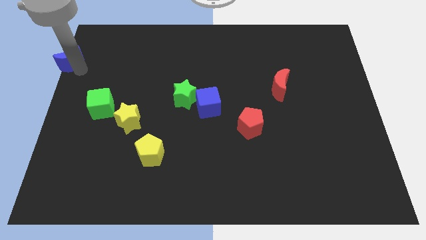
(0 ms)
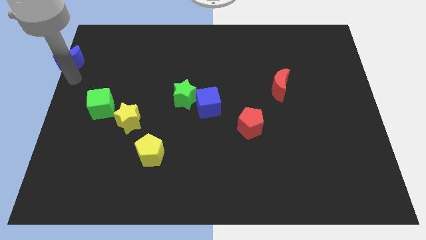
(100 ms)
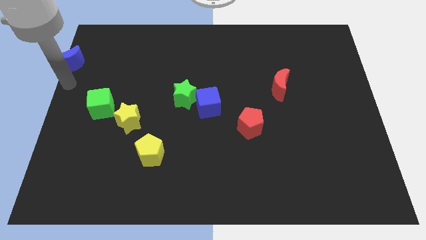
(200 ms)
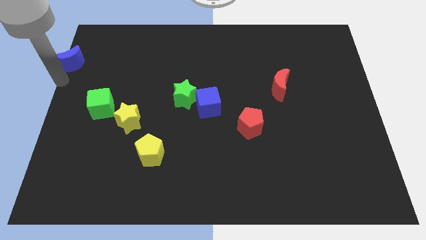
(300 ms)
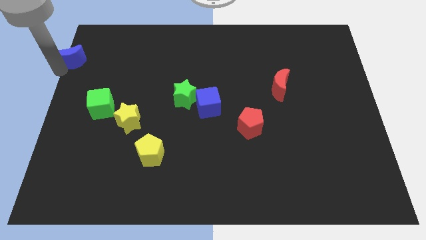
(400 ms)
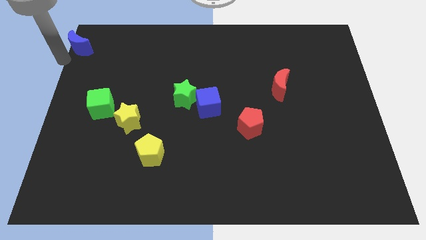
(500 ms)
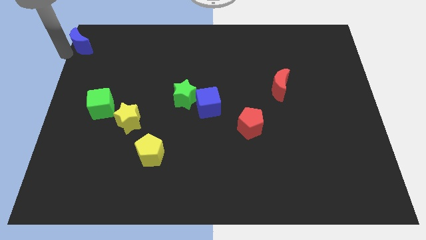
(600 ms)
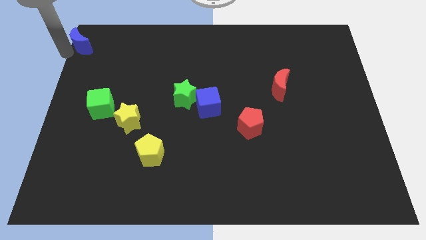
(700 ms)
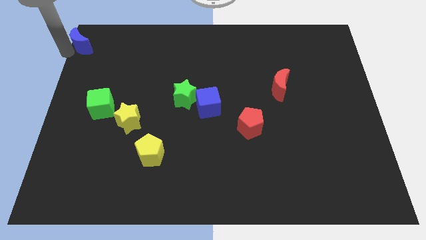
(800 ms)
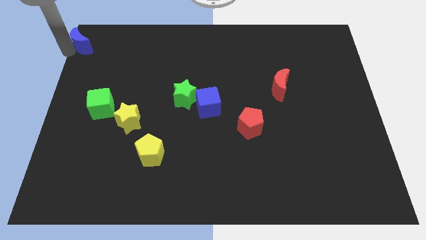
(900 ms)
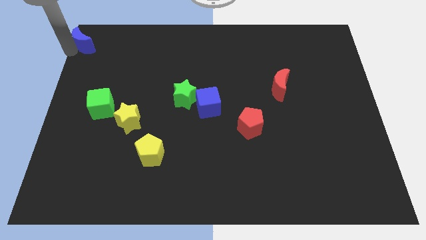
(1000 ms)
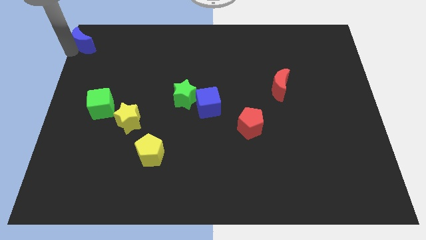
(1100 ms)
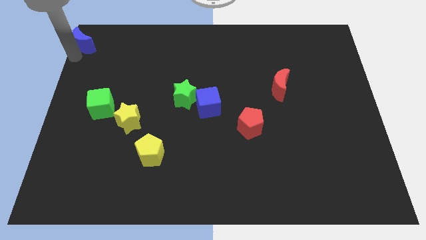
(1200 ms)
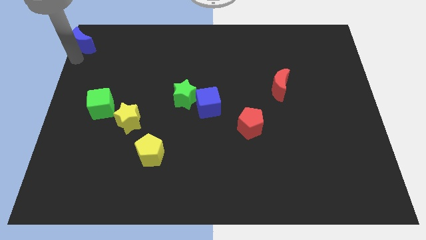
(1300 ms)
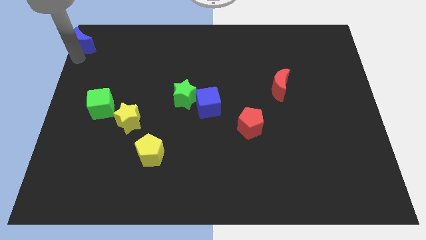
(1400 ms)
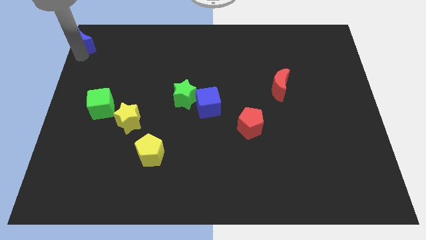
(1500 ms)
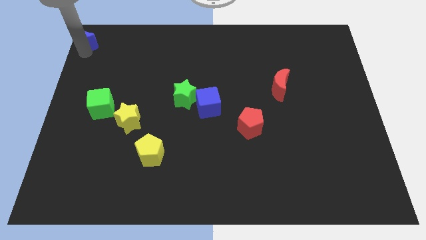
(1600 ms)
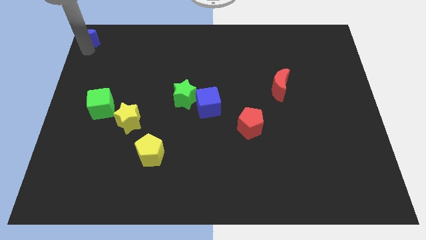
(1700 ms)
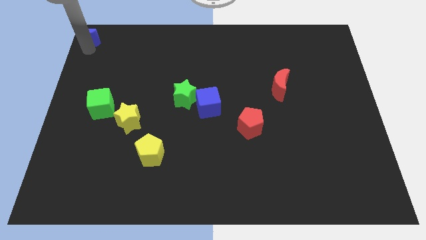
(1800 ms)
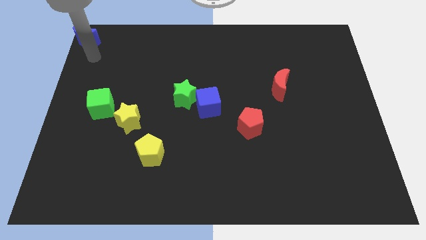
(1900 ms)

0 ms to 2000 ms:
push the blue crescent towards the top left corner of the board

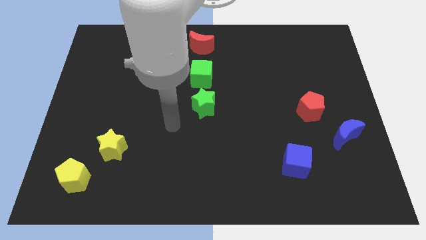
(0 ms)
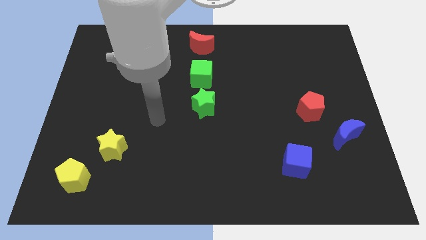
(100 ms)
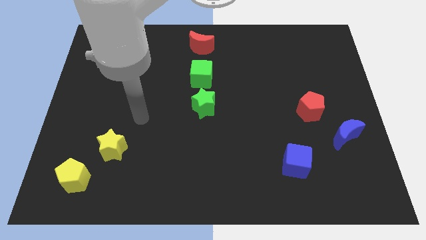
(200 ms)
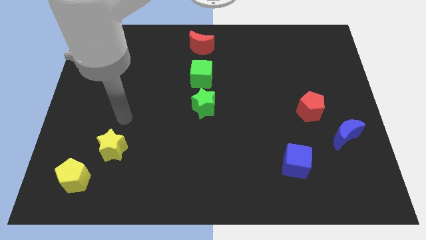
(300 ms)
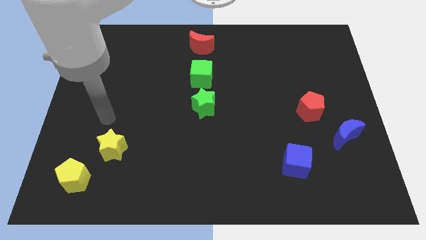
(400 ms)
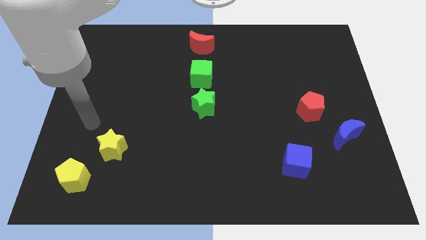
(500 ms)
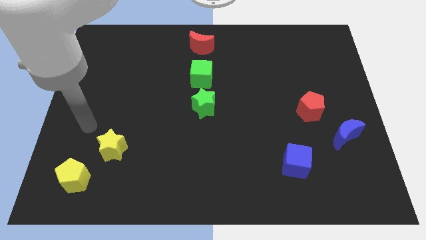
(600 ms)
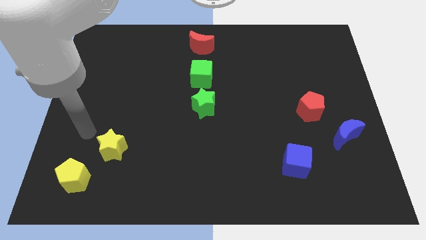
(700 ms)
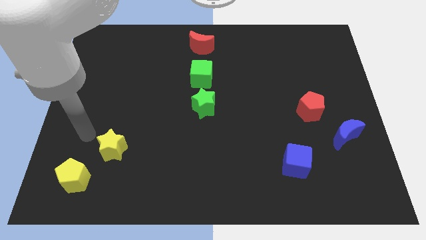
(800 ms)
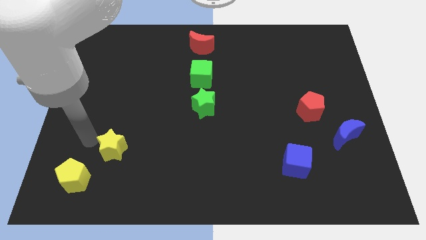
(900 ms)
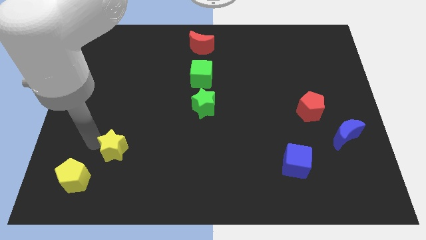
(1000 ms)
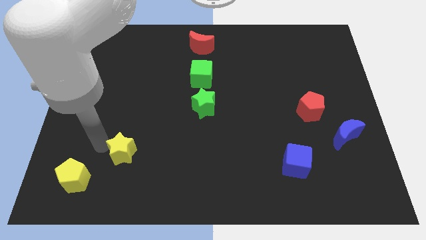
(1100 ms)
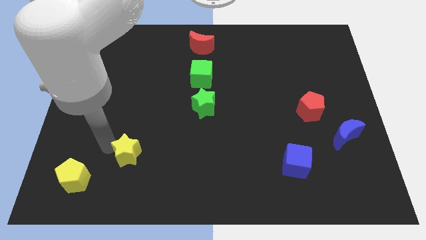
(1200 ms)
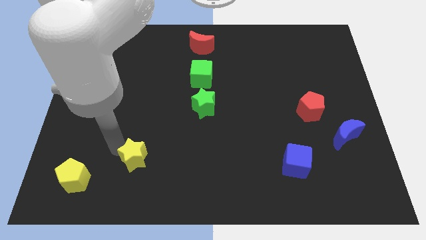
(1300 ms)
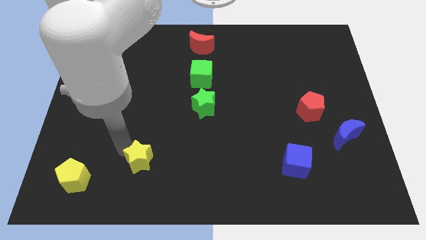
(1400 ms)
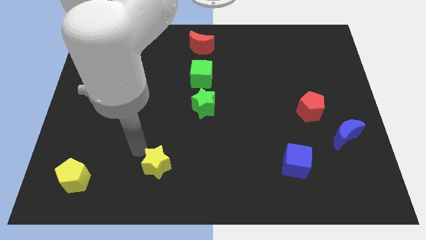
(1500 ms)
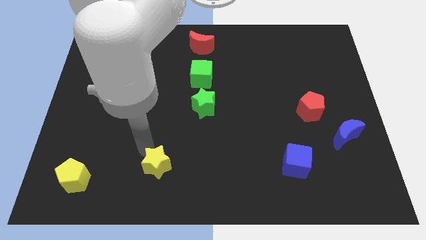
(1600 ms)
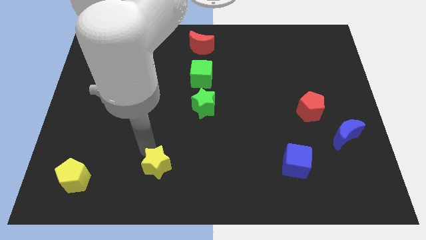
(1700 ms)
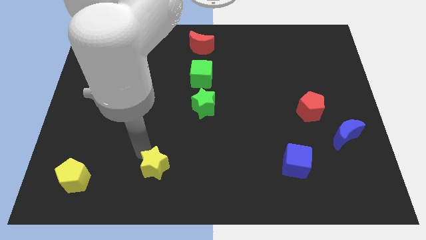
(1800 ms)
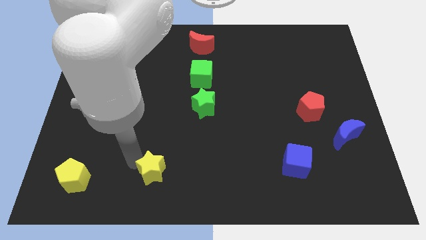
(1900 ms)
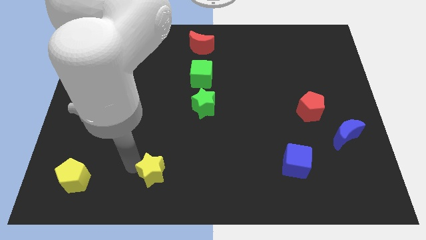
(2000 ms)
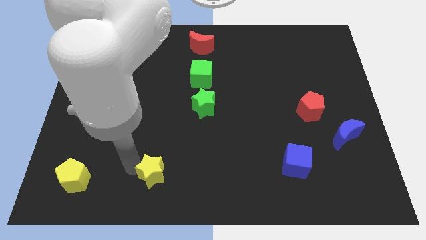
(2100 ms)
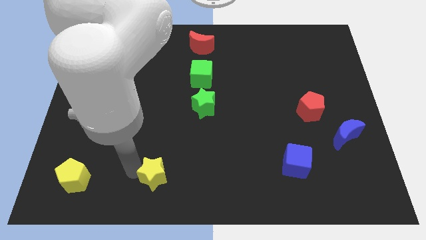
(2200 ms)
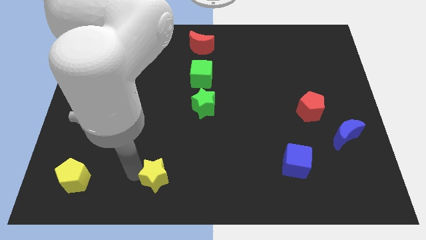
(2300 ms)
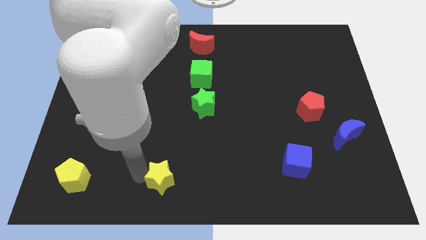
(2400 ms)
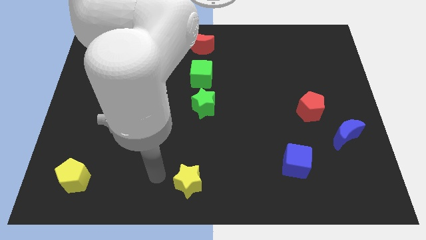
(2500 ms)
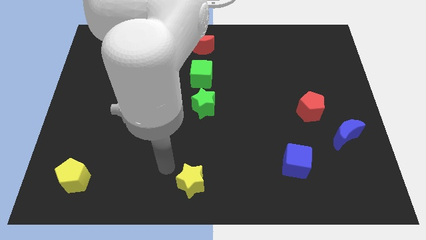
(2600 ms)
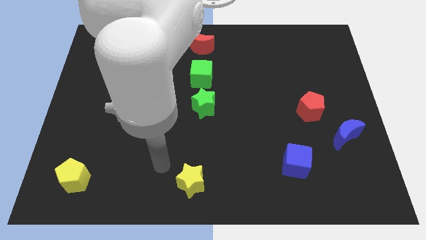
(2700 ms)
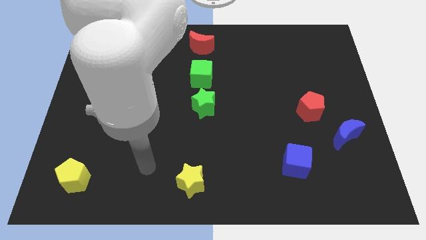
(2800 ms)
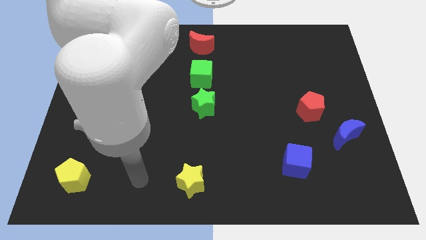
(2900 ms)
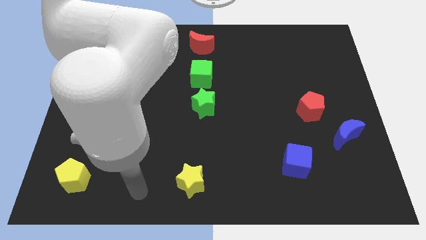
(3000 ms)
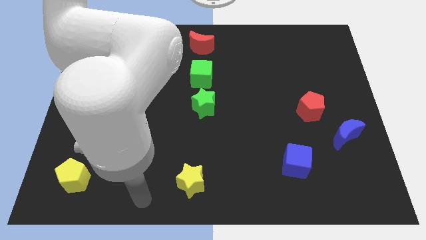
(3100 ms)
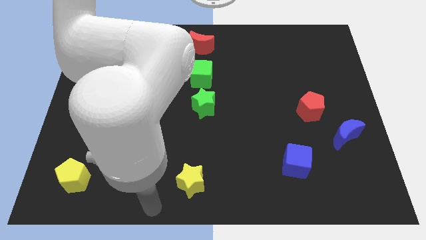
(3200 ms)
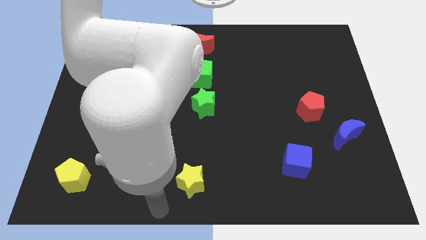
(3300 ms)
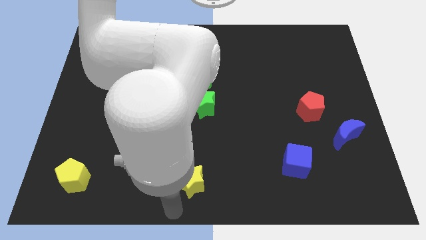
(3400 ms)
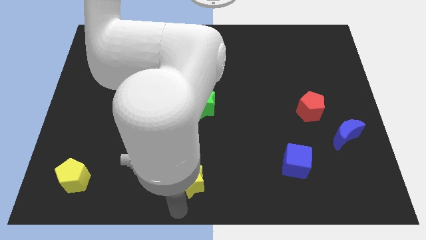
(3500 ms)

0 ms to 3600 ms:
move the yellow star to the bottom center of the board

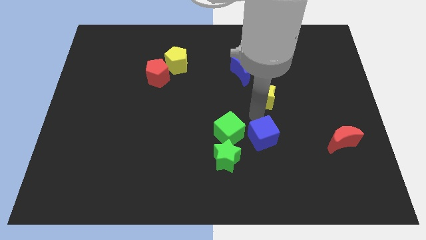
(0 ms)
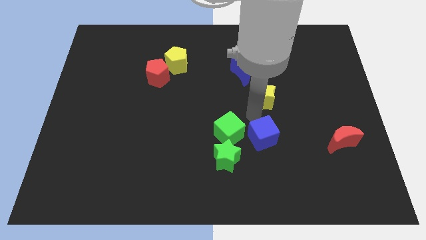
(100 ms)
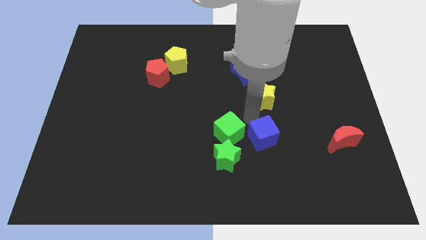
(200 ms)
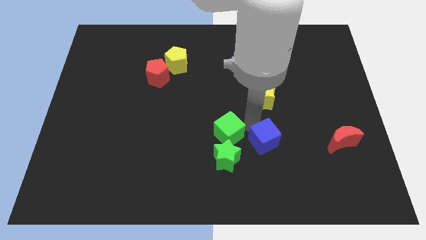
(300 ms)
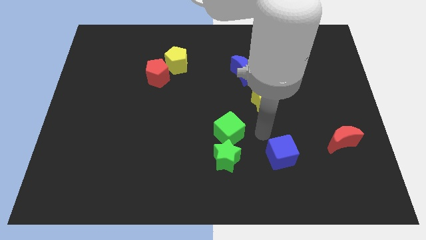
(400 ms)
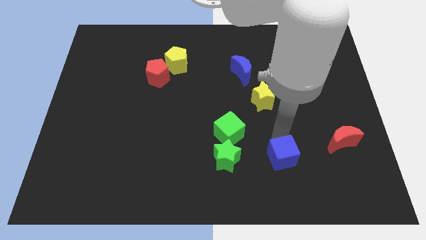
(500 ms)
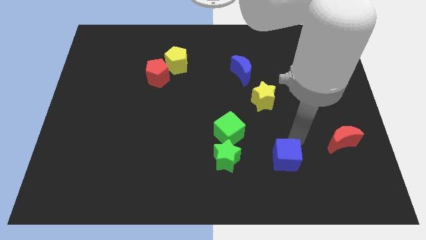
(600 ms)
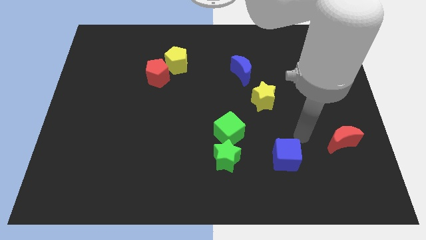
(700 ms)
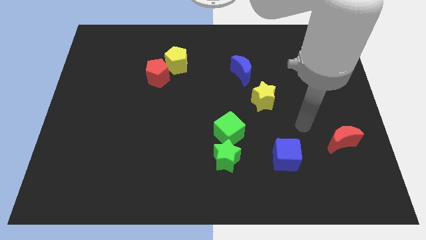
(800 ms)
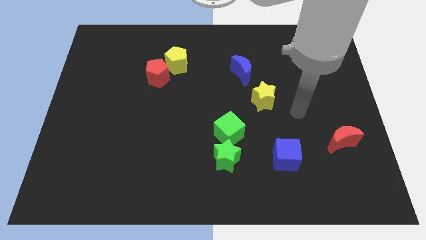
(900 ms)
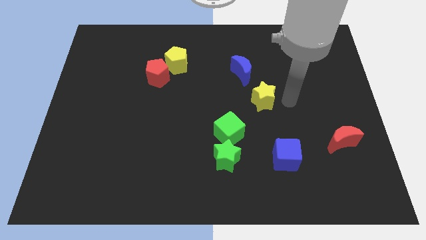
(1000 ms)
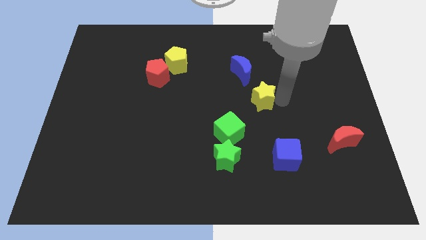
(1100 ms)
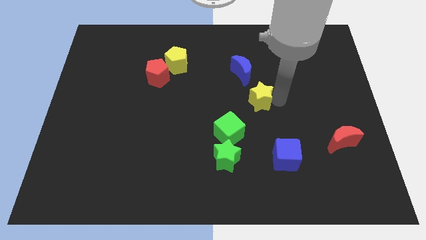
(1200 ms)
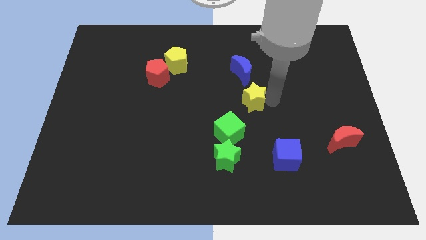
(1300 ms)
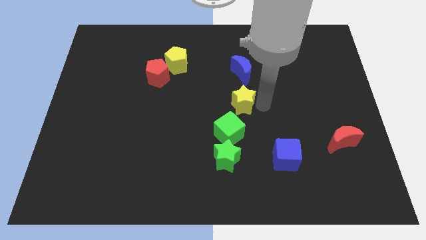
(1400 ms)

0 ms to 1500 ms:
push the blue cube towards the bottom right

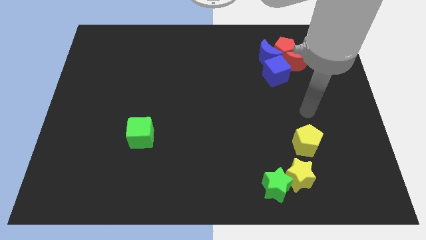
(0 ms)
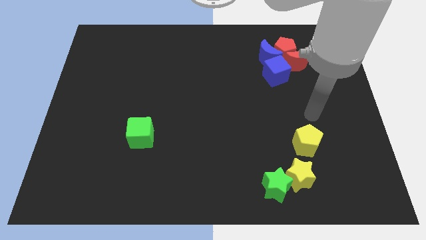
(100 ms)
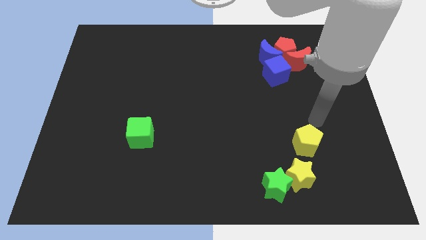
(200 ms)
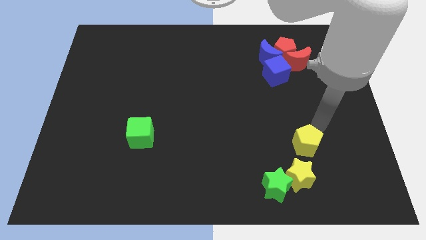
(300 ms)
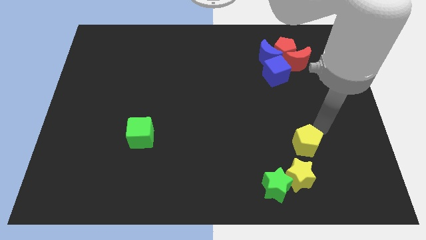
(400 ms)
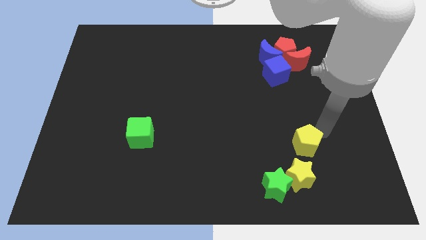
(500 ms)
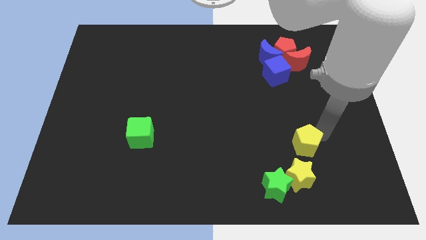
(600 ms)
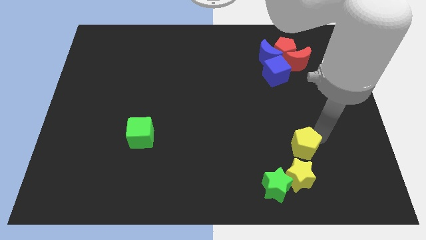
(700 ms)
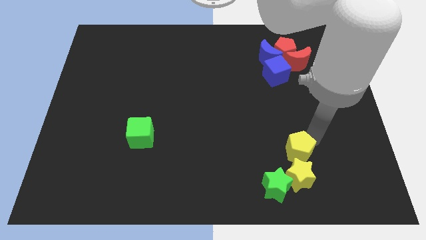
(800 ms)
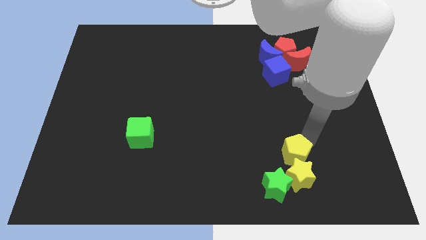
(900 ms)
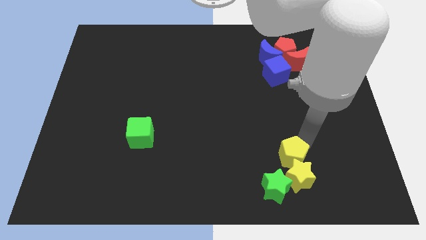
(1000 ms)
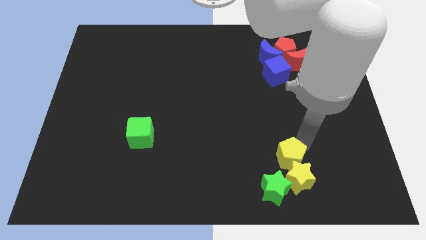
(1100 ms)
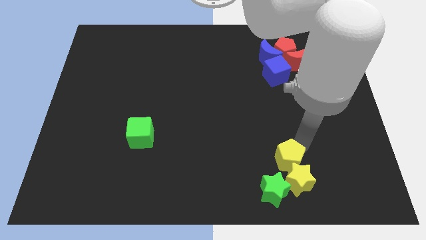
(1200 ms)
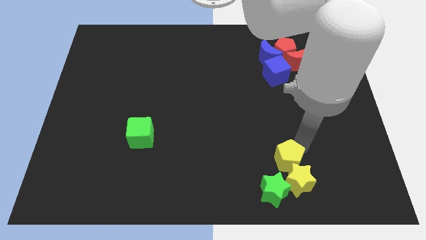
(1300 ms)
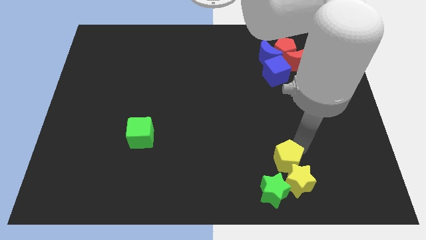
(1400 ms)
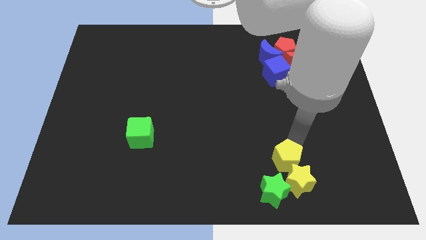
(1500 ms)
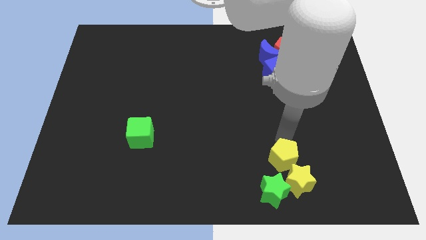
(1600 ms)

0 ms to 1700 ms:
move yellow pentagon towards yellow star
